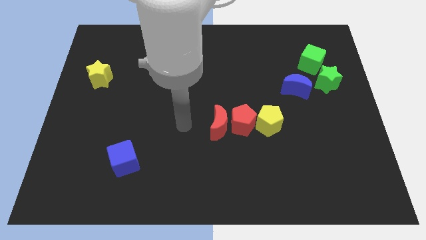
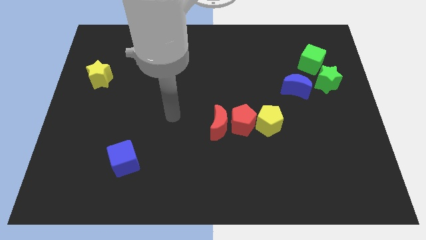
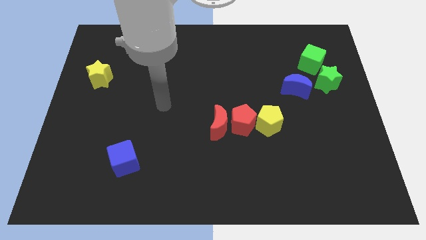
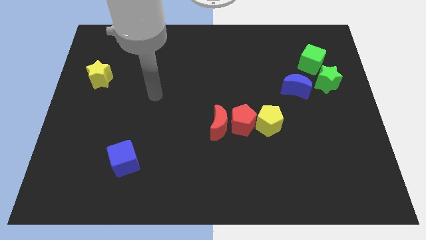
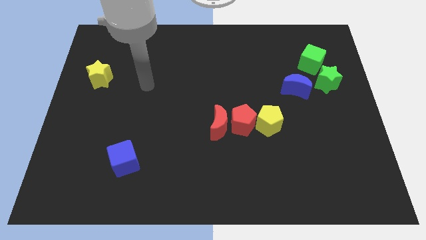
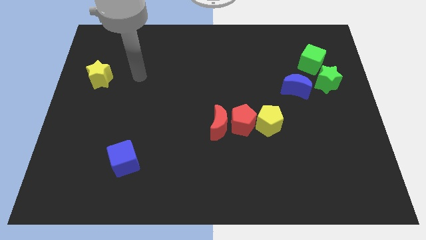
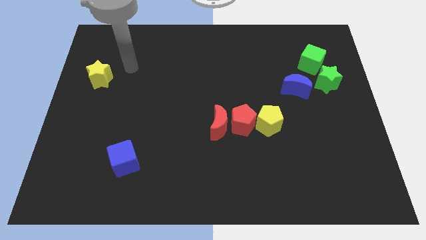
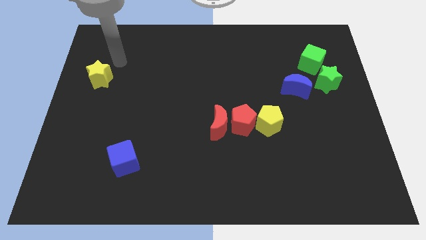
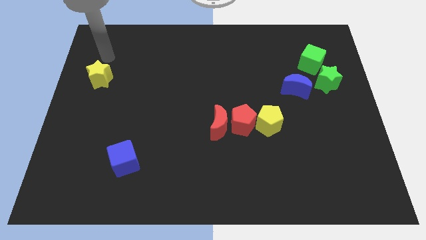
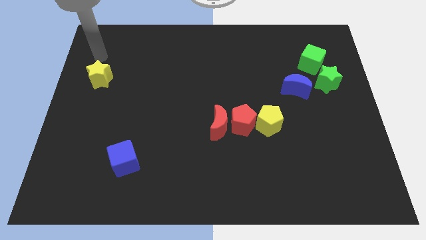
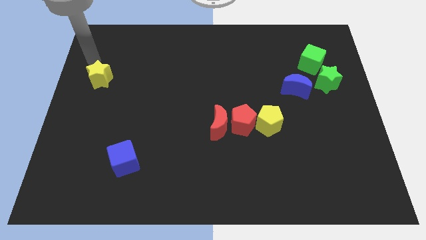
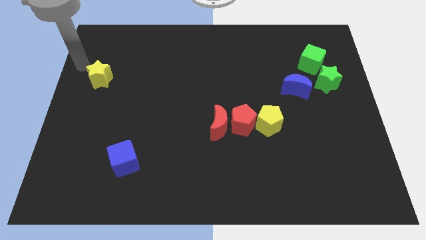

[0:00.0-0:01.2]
place your arm above yellow star

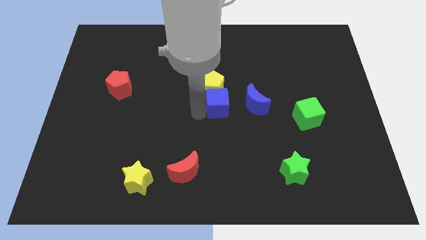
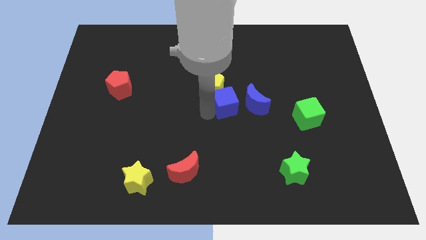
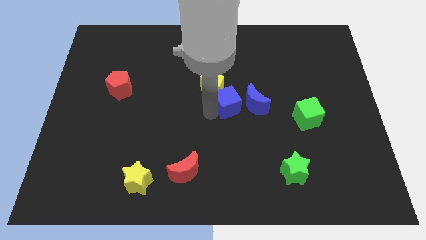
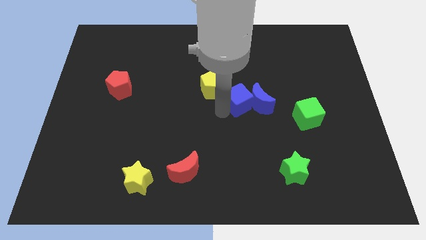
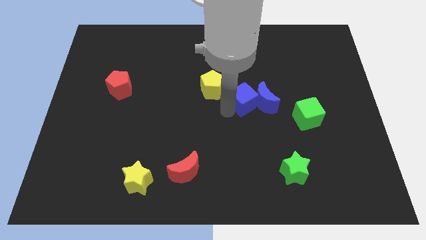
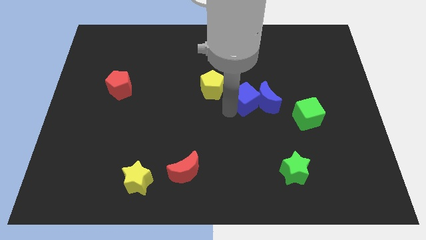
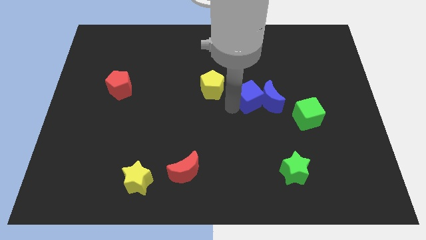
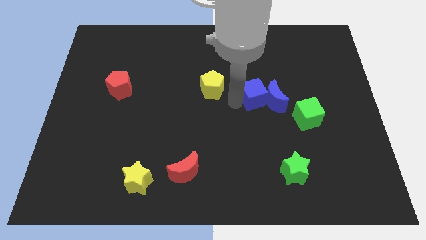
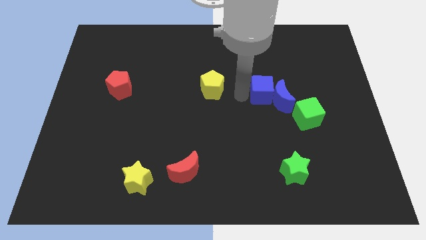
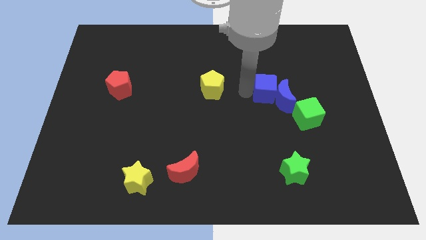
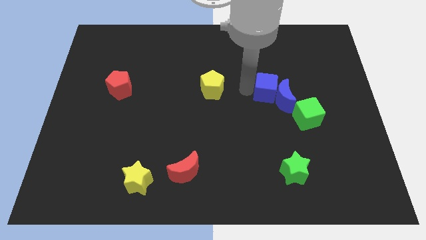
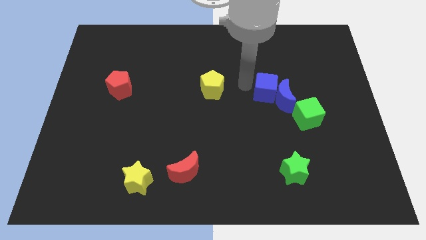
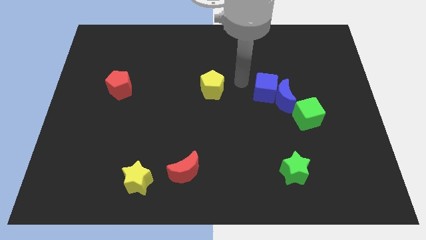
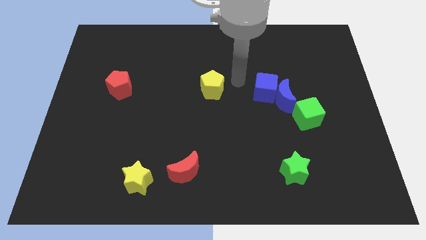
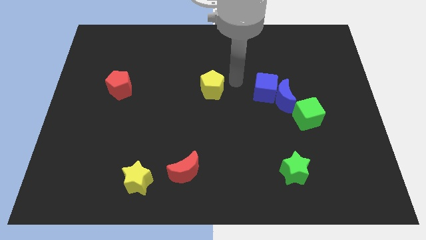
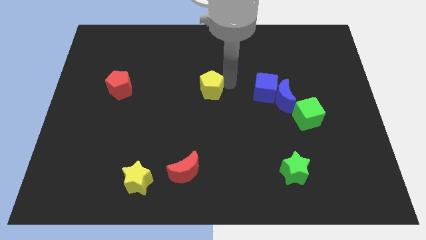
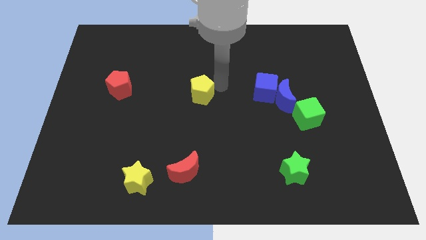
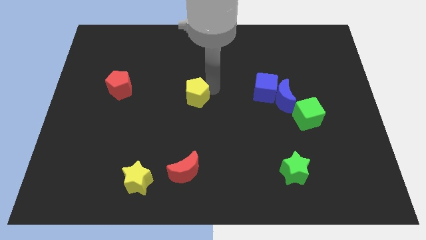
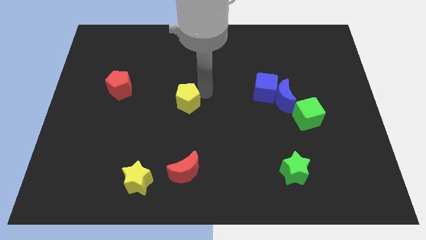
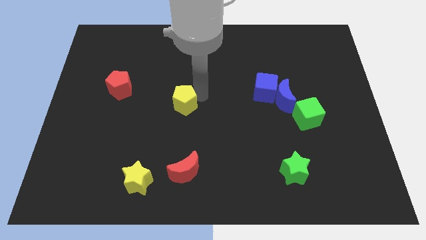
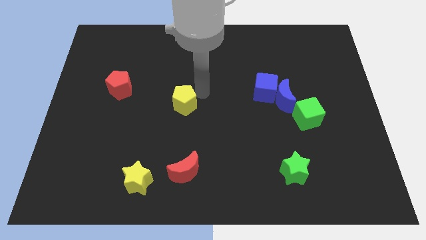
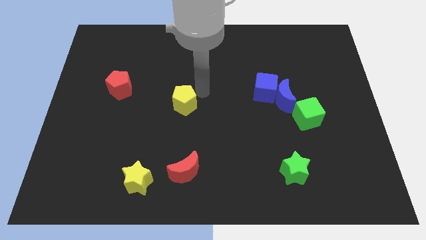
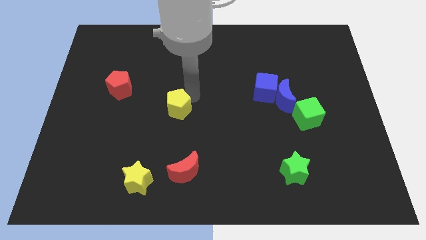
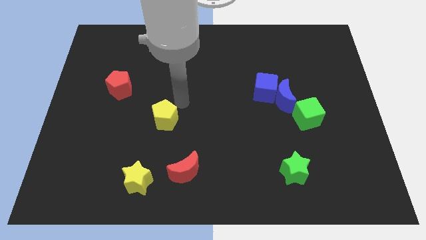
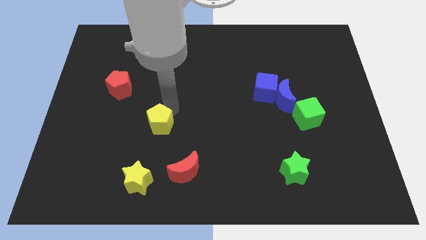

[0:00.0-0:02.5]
place yellow pentagon in between red blocks

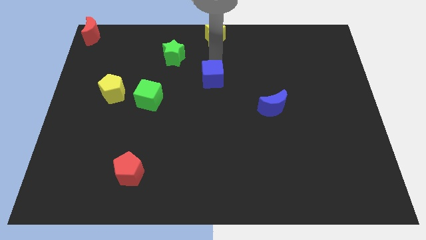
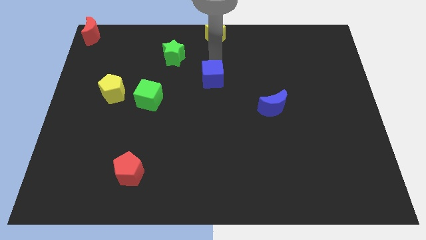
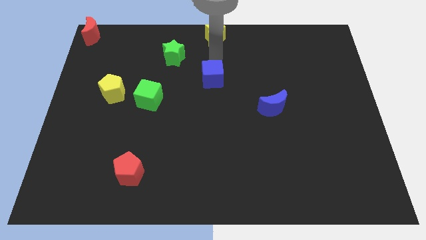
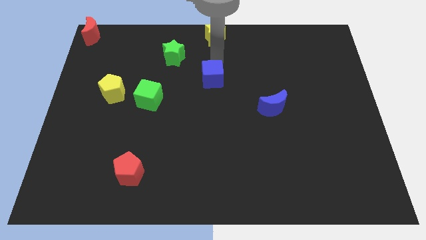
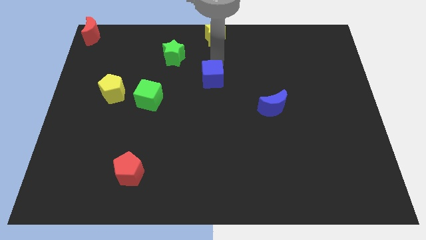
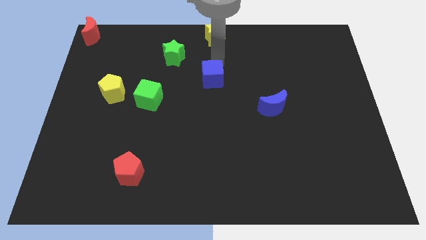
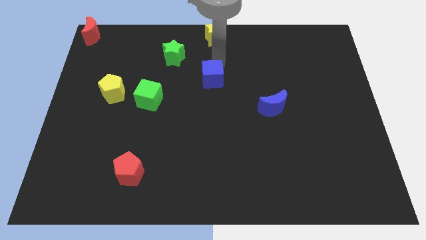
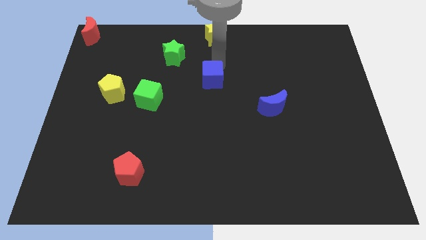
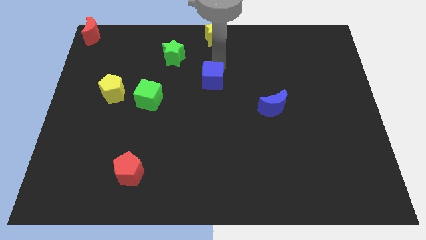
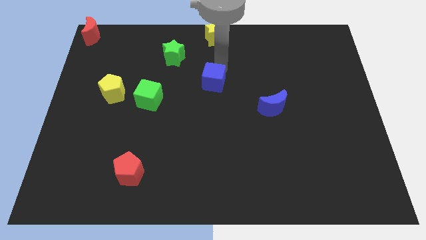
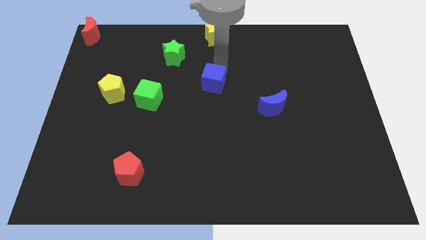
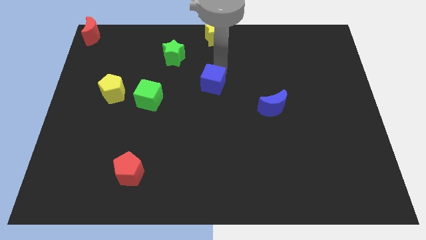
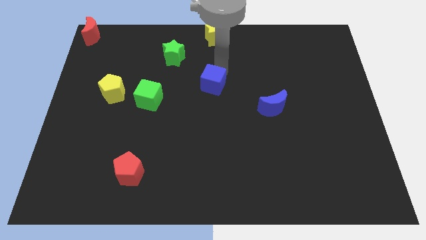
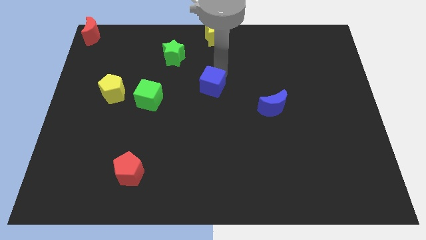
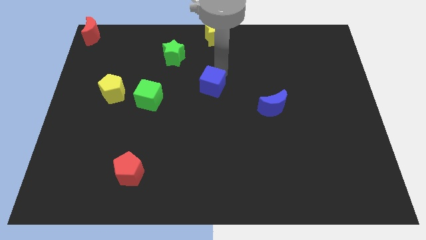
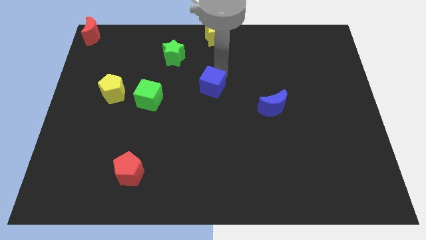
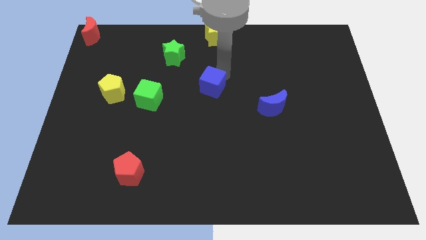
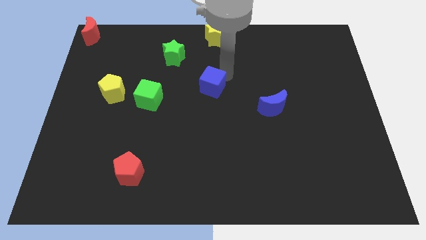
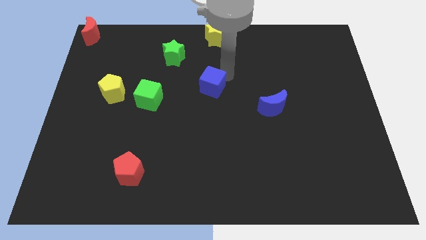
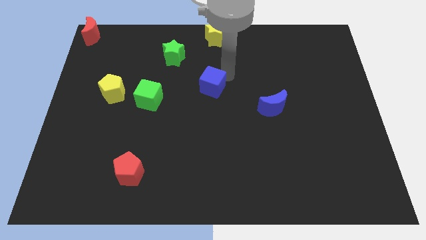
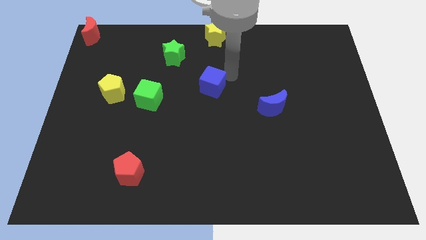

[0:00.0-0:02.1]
slide the blue cube towards the center

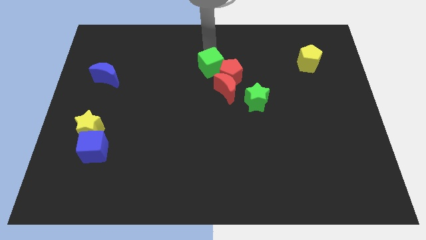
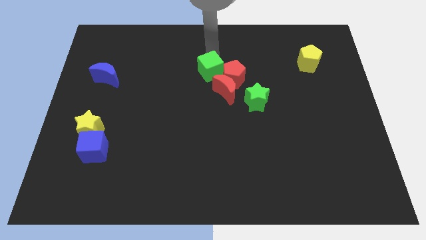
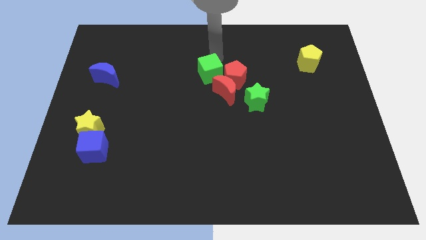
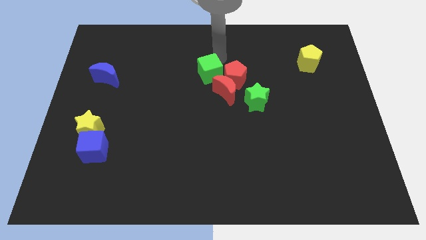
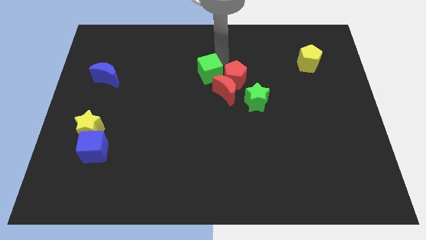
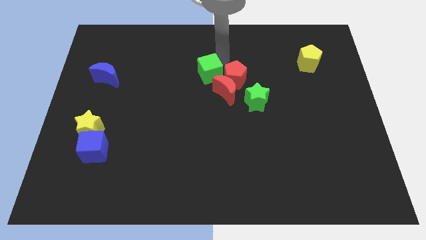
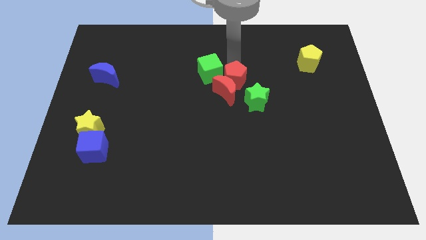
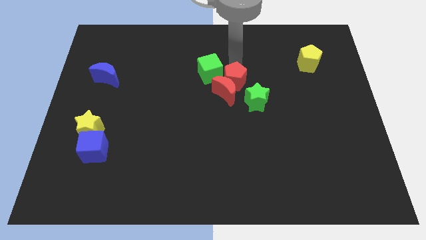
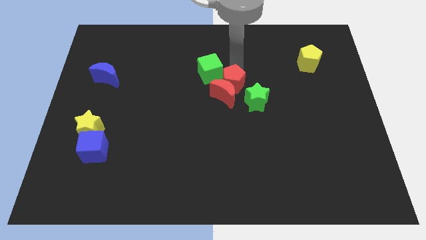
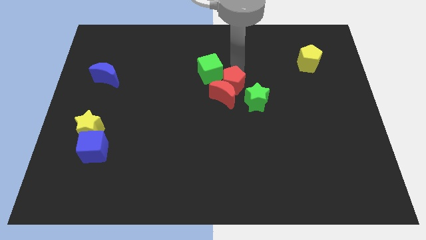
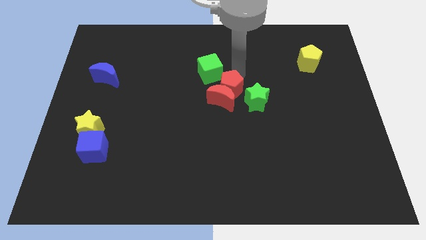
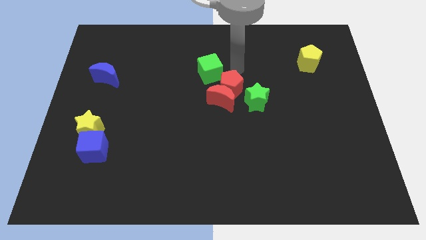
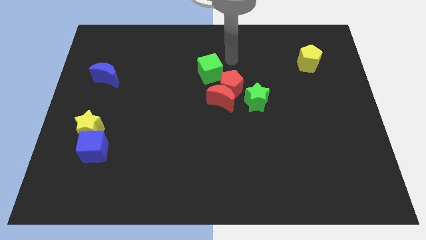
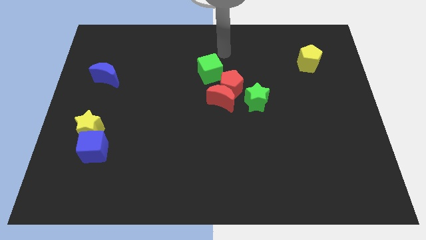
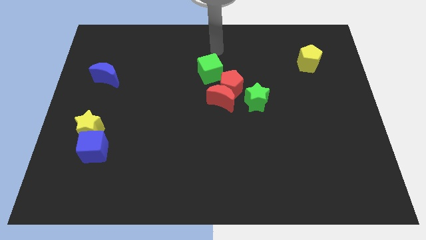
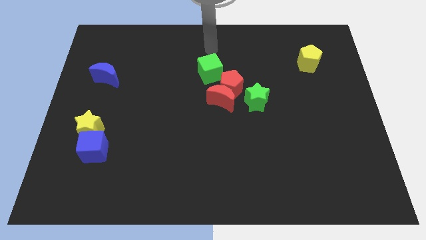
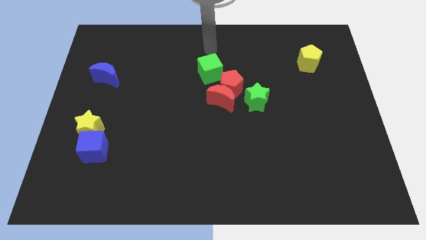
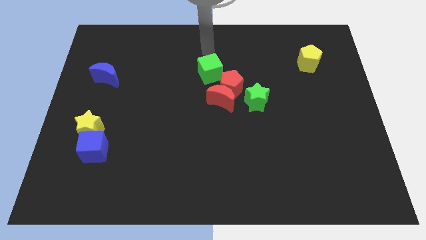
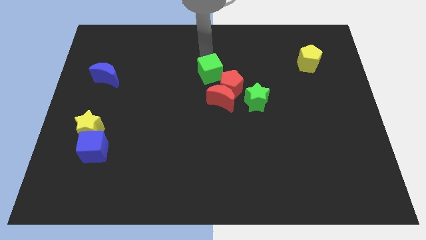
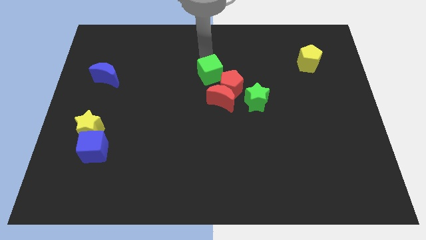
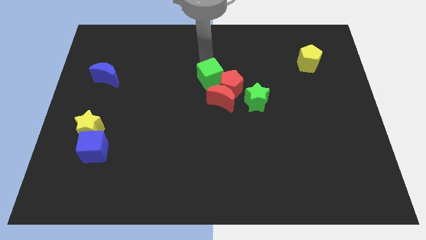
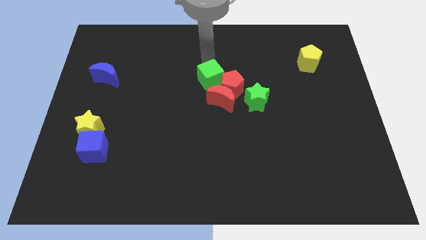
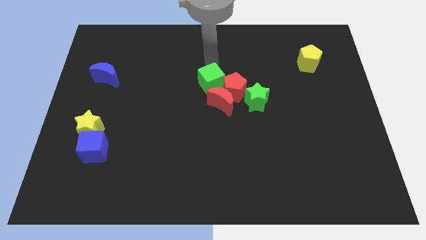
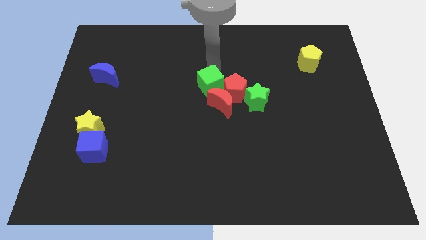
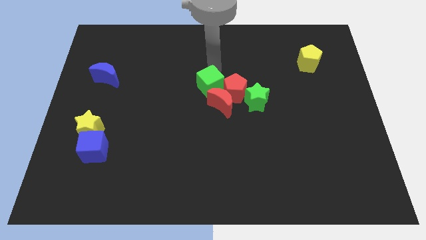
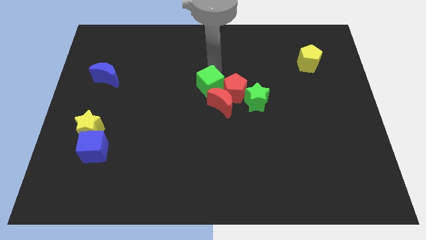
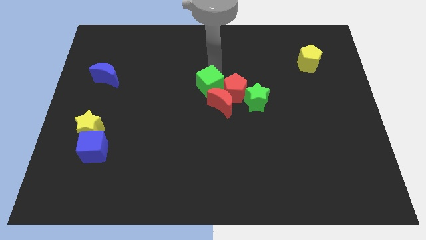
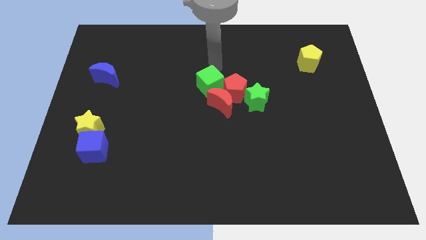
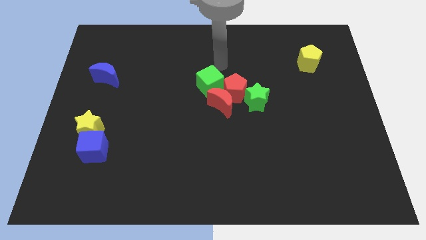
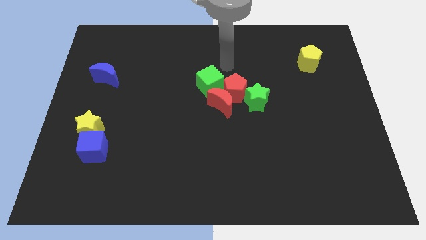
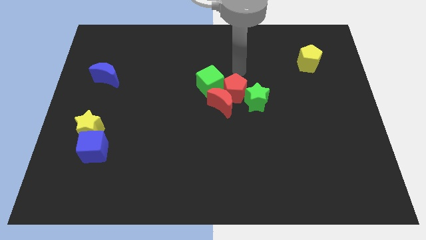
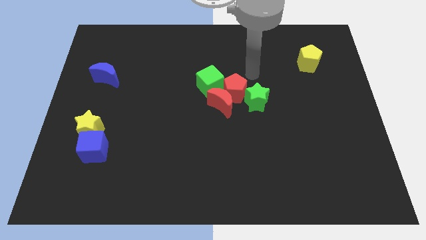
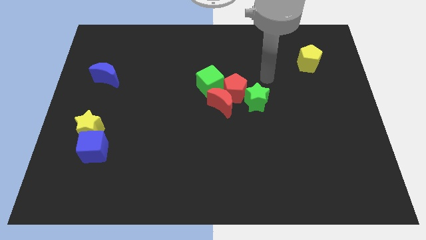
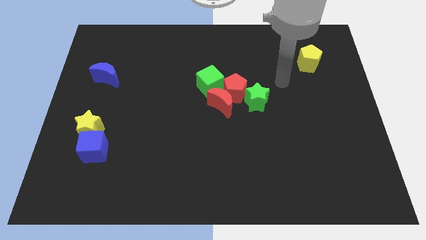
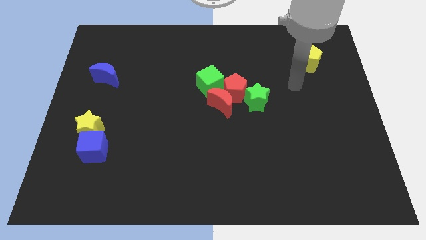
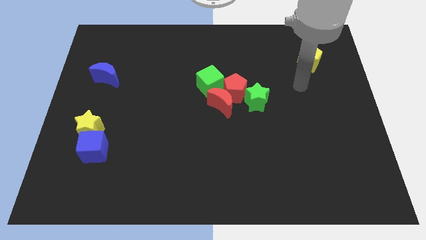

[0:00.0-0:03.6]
make a group out of green and red blocks
